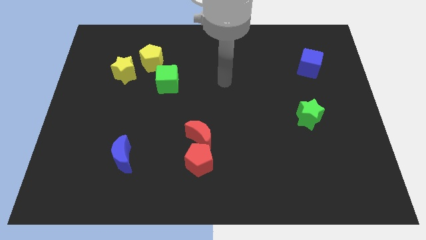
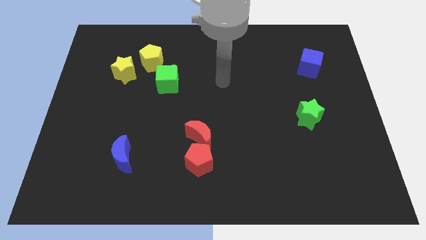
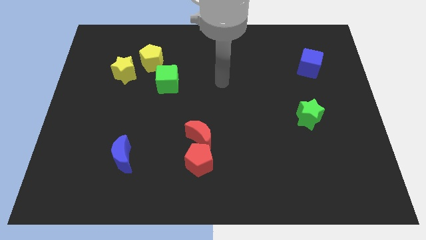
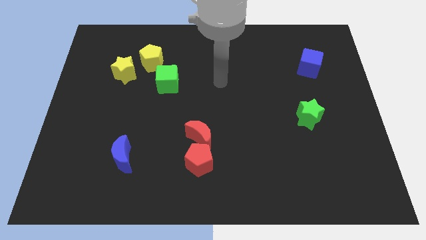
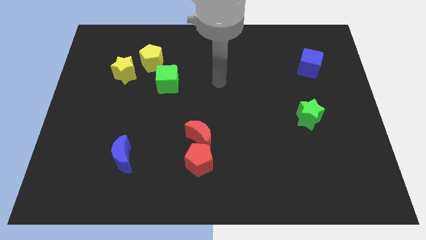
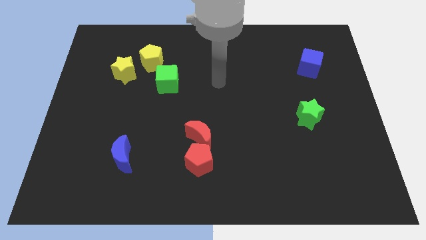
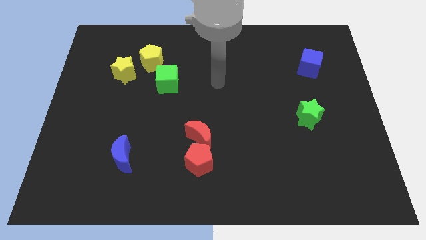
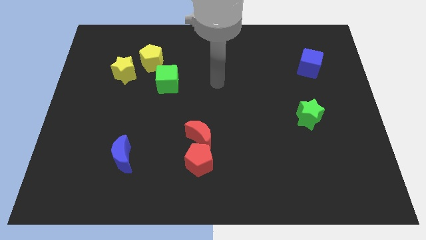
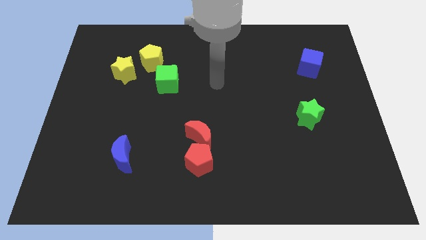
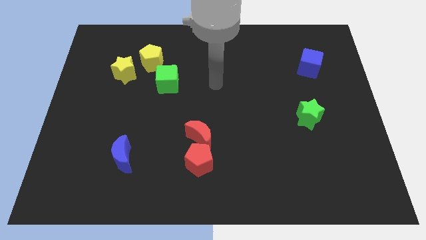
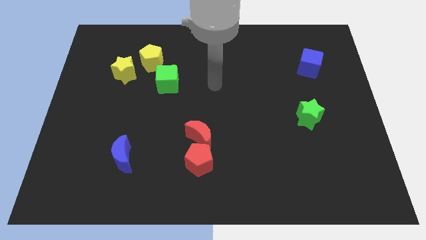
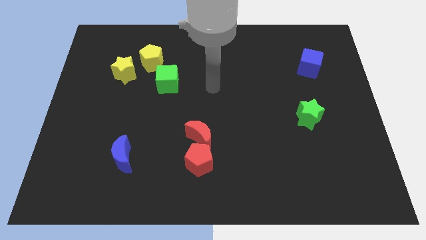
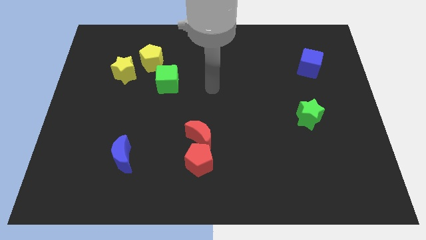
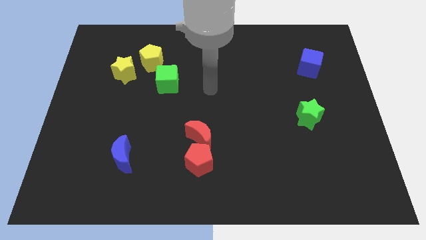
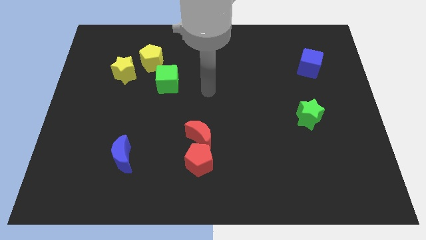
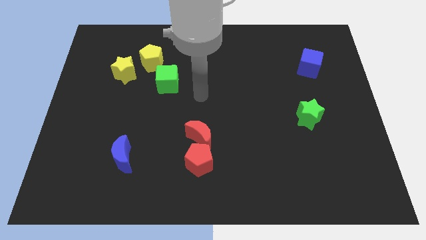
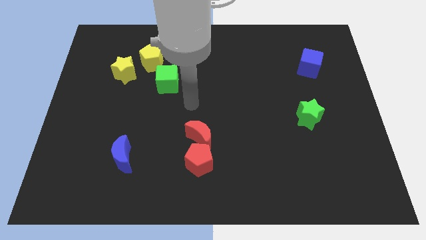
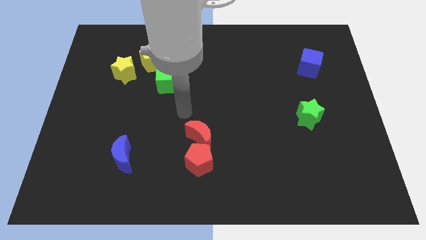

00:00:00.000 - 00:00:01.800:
point the arm in between the green cube and the red moon

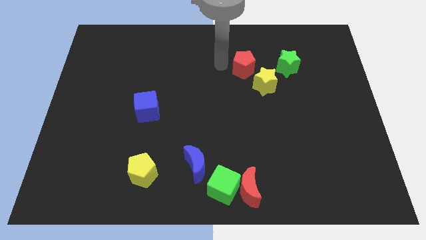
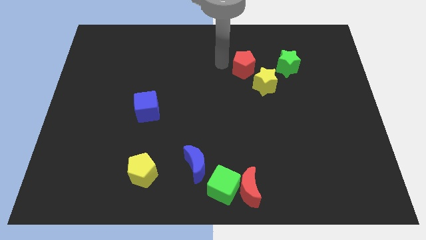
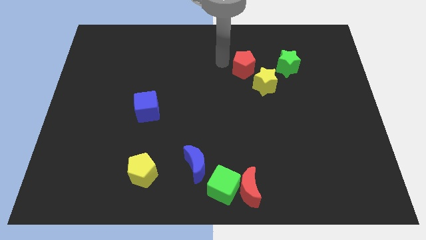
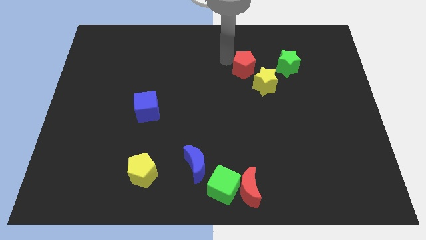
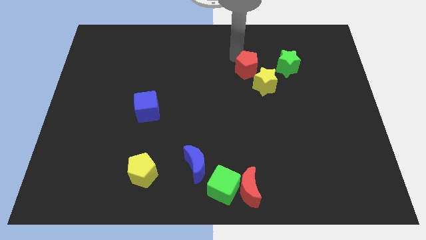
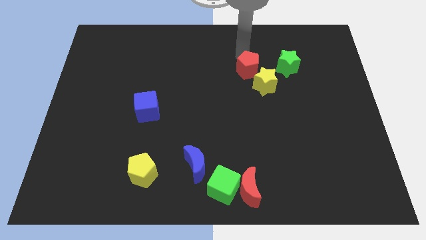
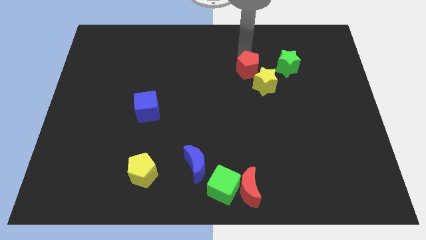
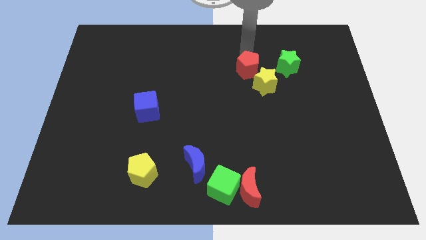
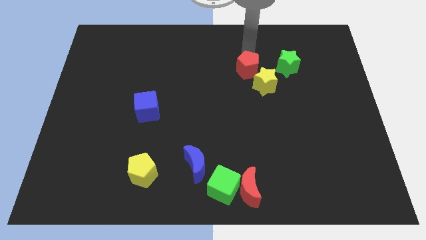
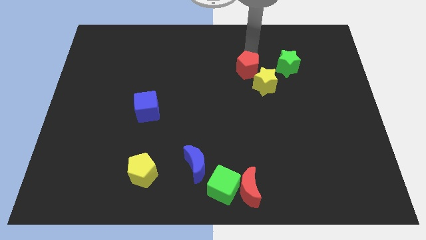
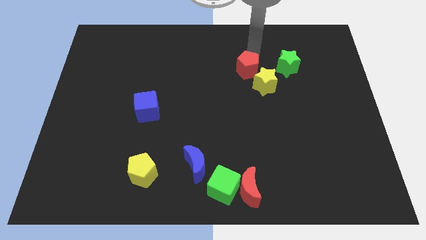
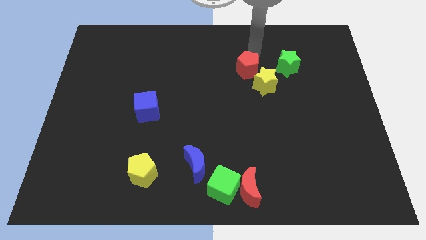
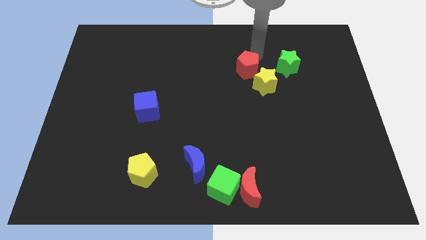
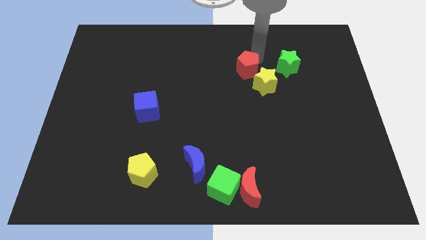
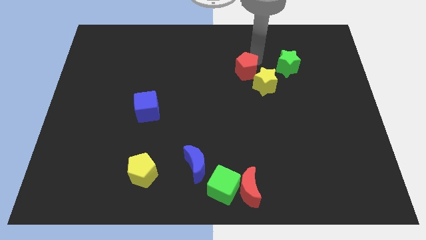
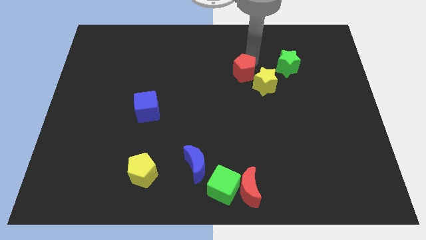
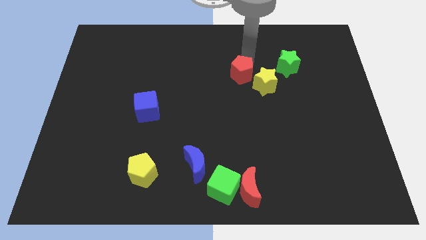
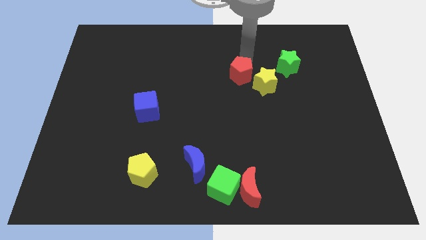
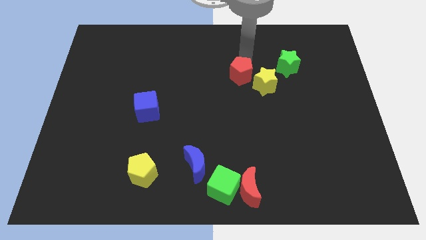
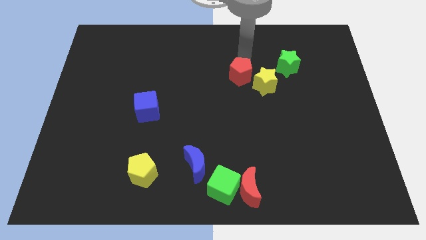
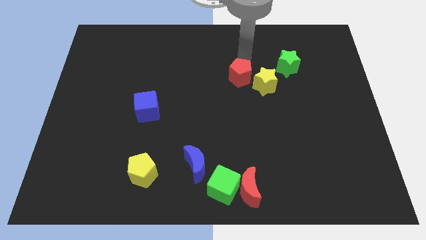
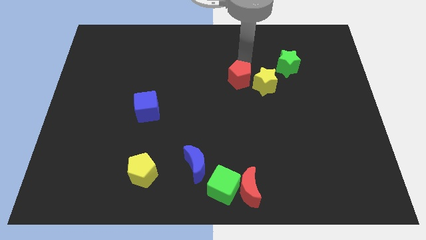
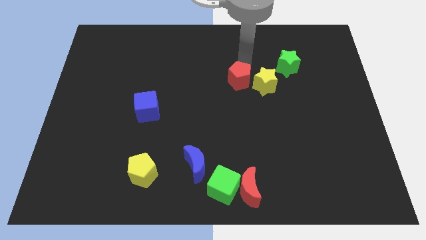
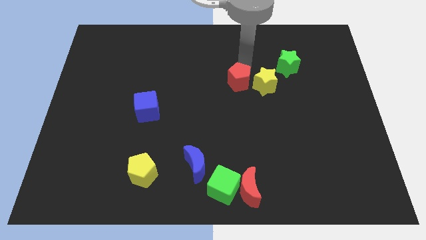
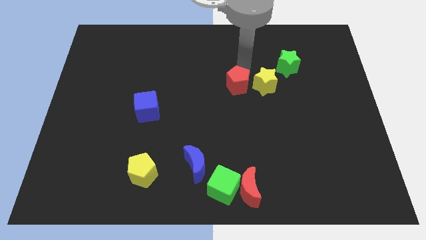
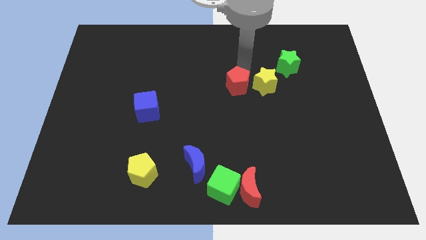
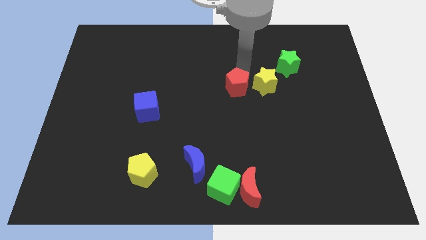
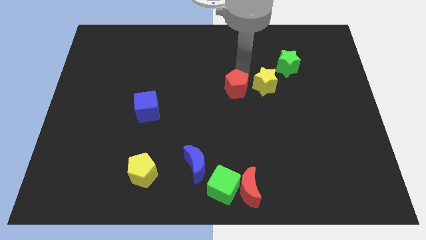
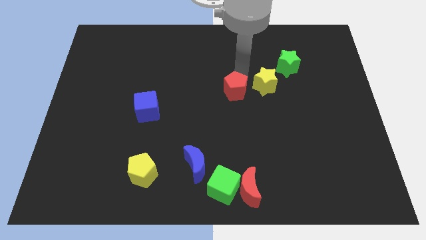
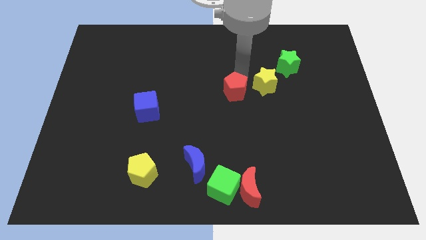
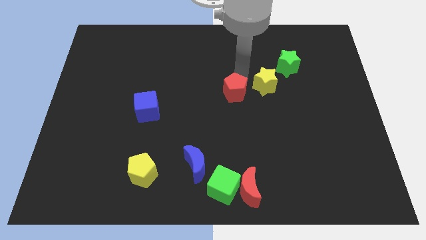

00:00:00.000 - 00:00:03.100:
place red pentagon to the left of yellow star

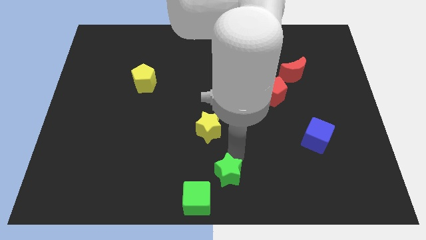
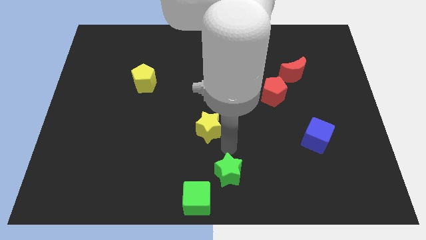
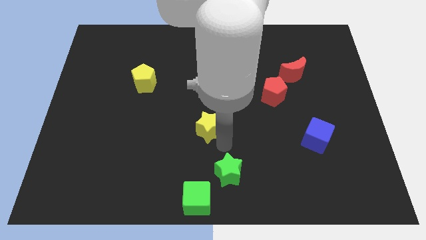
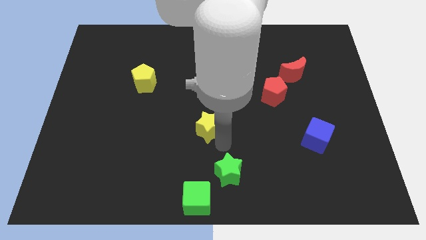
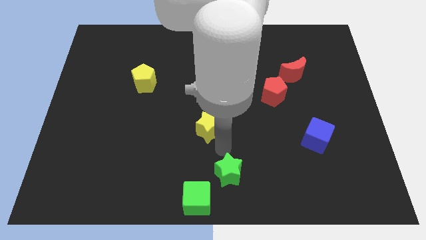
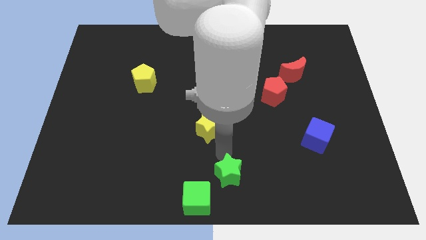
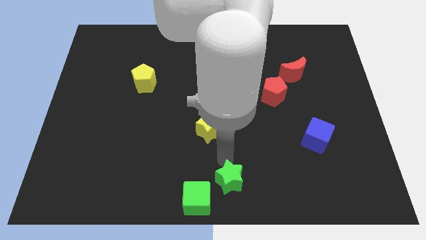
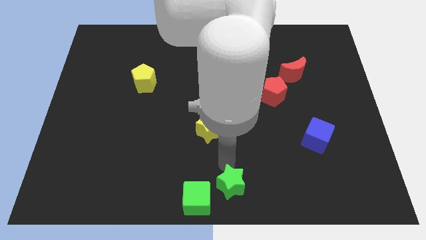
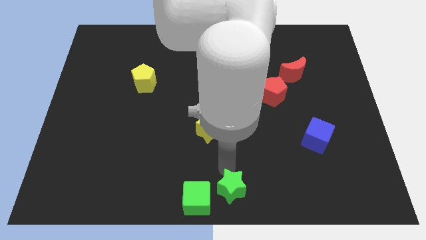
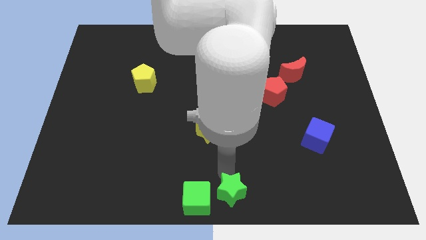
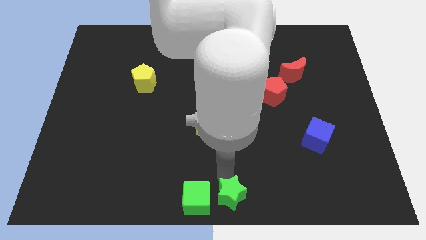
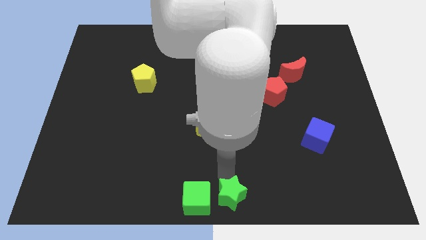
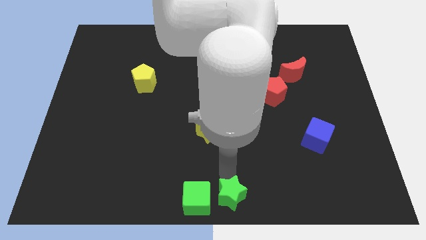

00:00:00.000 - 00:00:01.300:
move the green star to the right of green cube

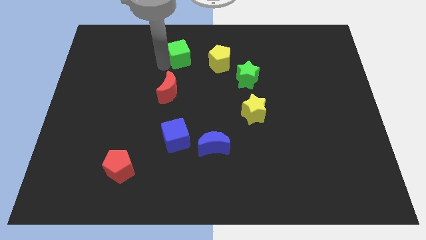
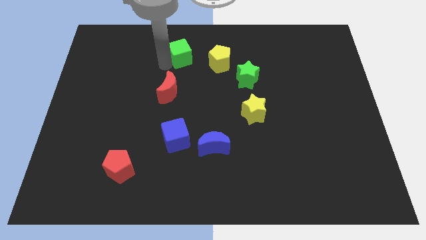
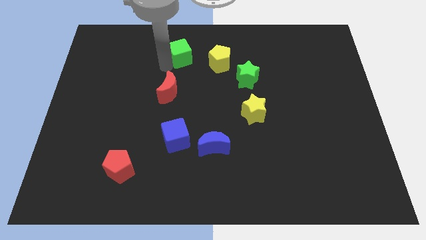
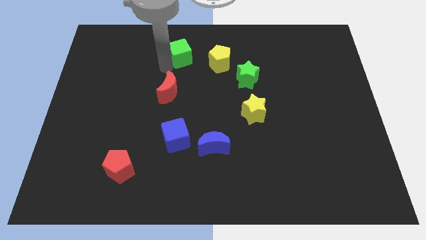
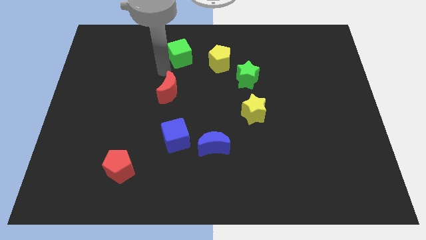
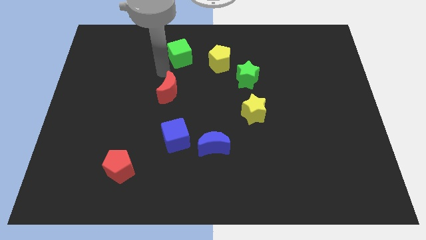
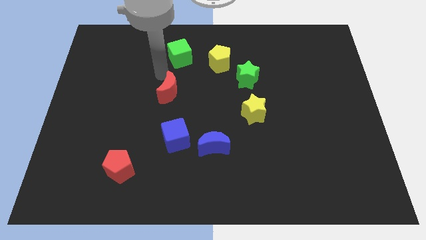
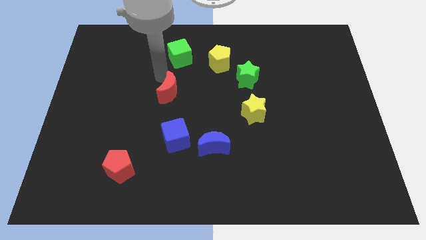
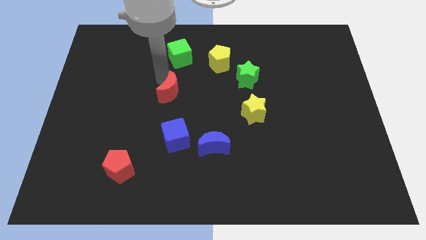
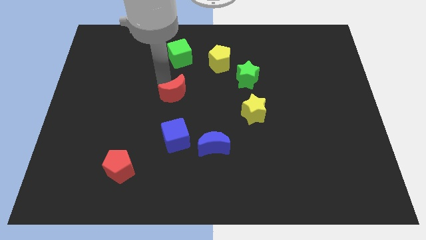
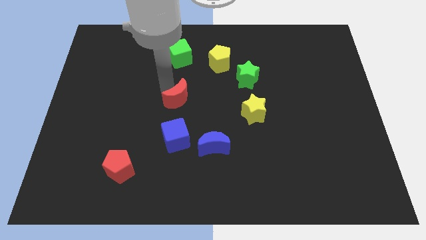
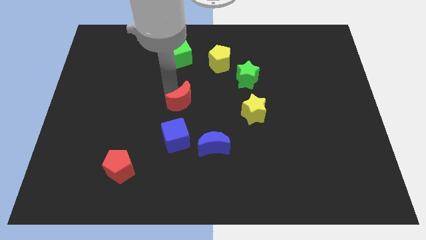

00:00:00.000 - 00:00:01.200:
place the red crescent on the top of the red moon vertically

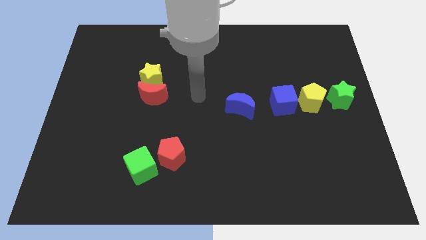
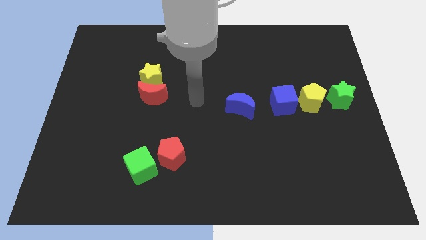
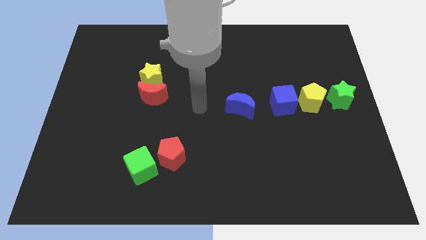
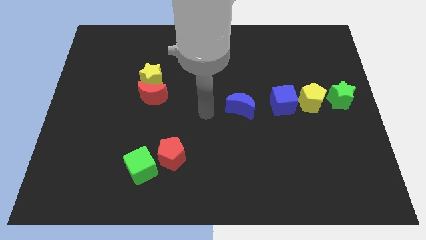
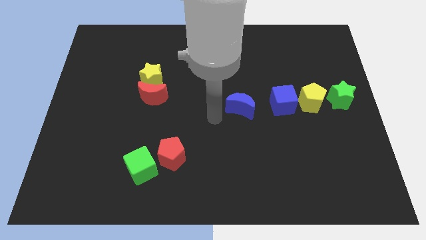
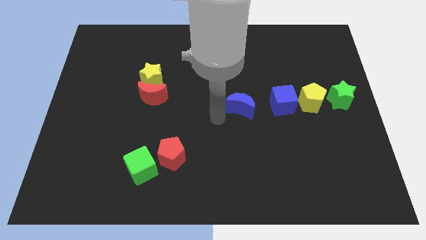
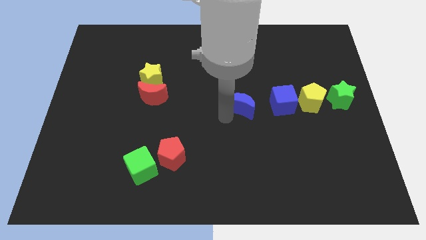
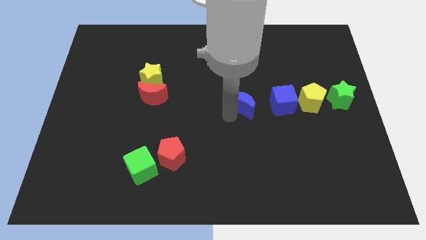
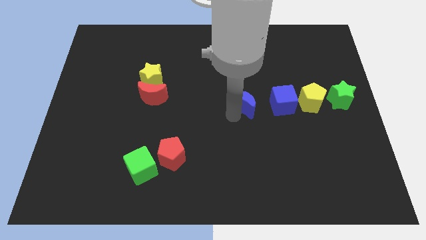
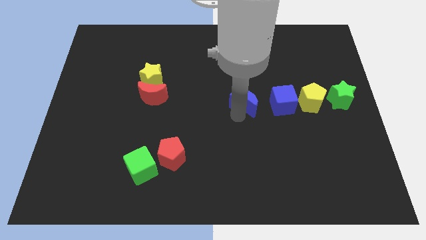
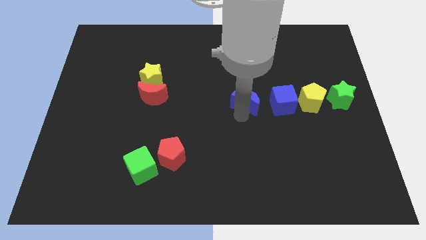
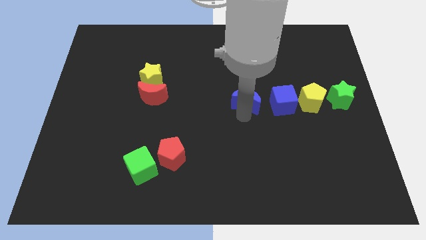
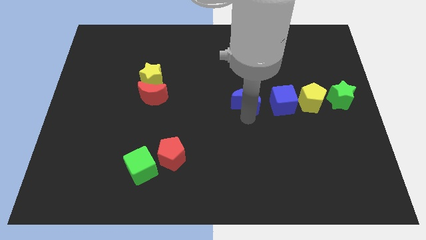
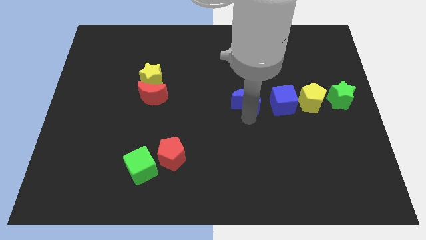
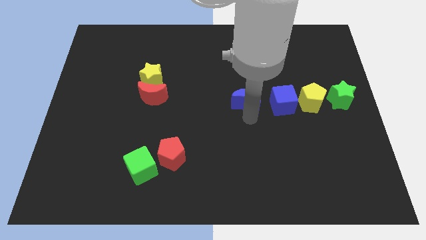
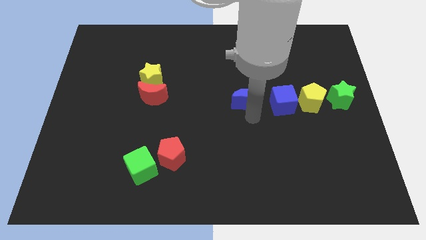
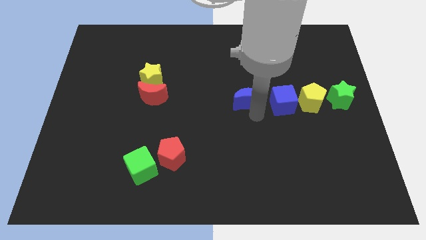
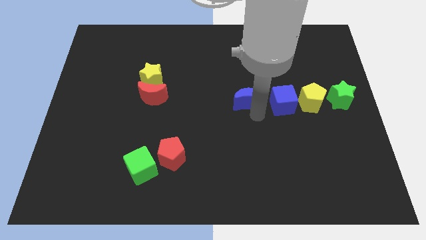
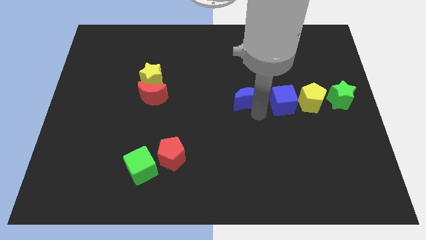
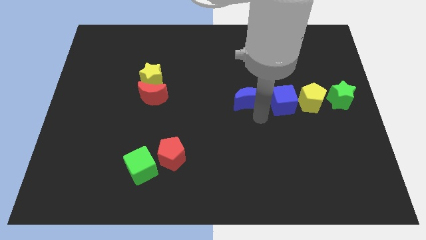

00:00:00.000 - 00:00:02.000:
slightly push the blue crescent to the right side
